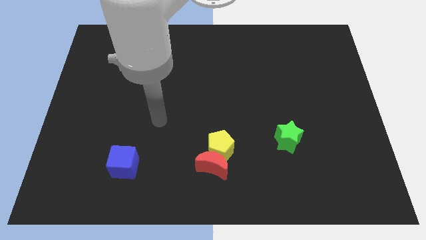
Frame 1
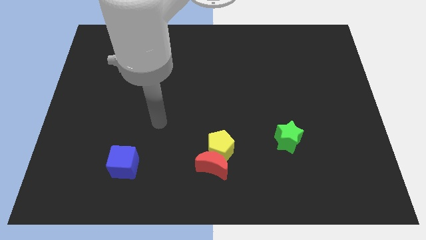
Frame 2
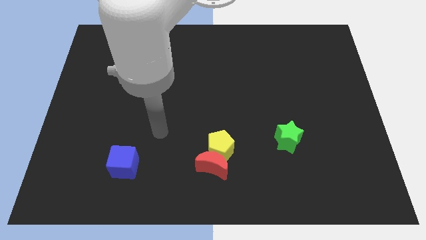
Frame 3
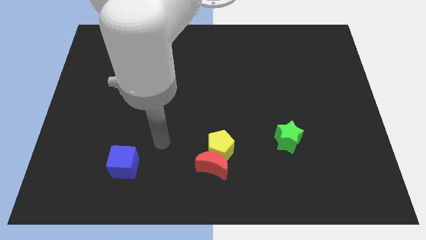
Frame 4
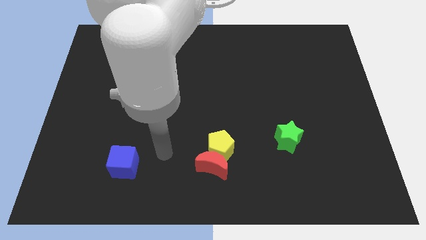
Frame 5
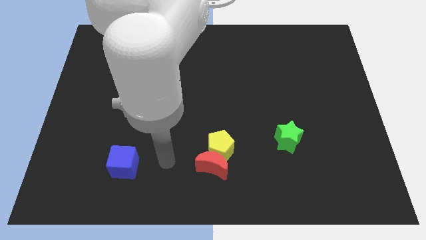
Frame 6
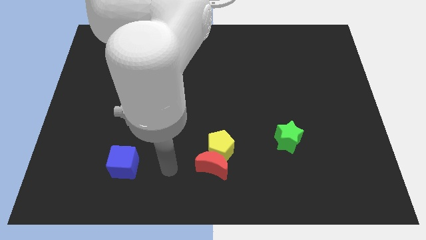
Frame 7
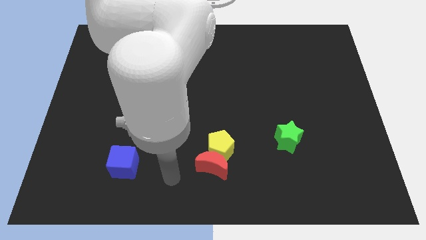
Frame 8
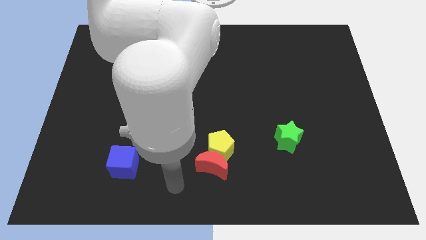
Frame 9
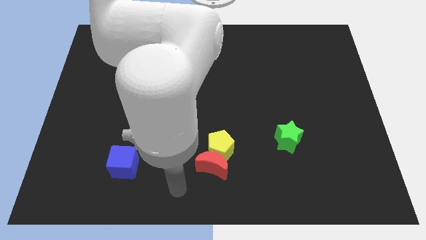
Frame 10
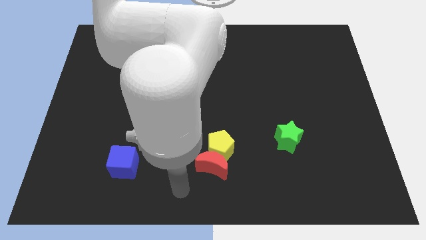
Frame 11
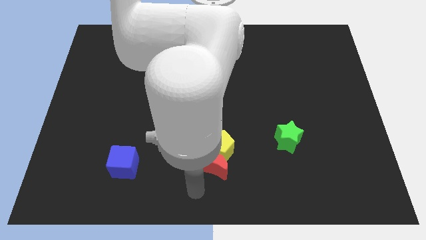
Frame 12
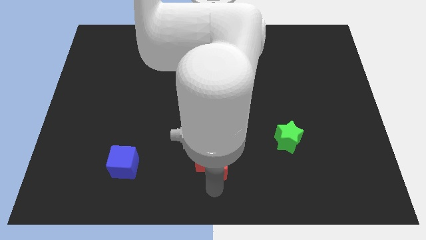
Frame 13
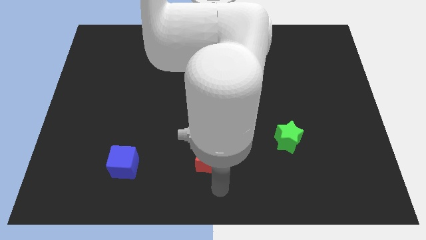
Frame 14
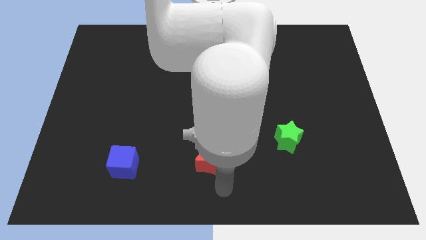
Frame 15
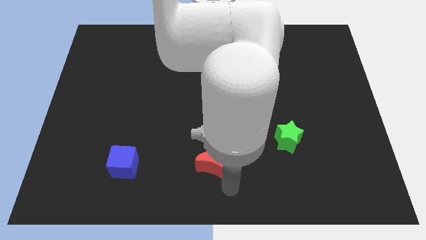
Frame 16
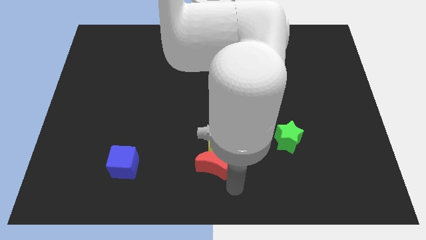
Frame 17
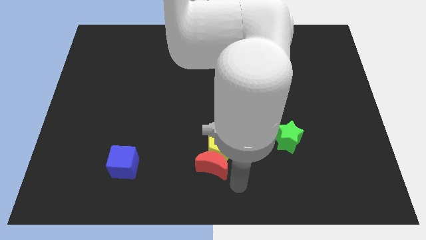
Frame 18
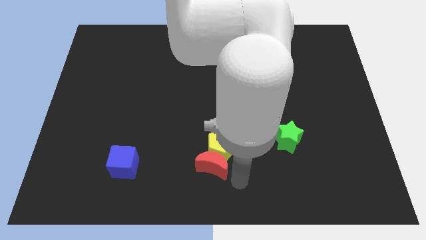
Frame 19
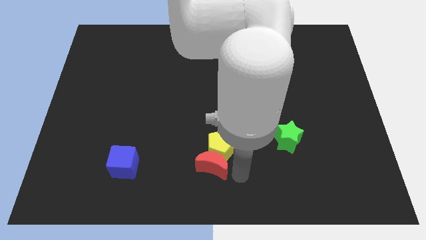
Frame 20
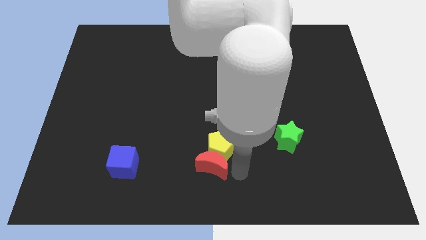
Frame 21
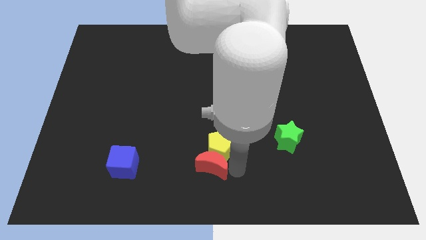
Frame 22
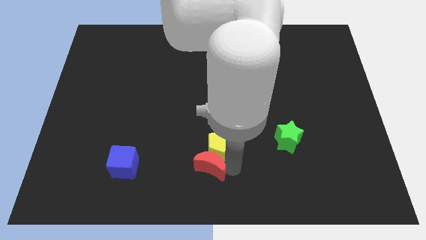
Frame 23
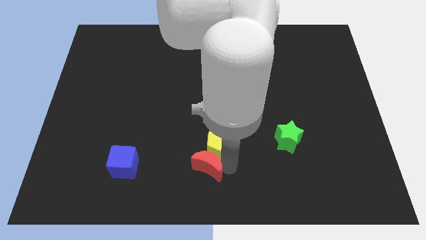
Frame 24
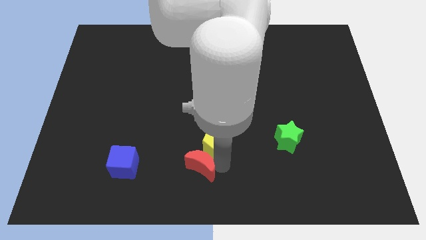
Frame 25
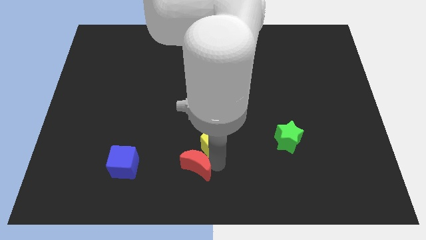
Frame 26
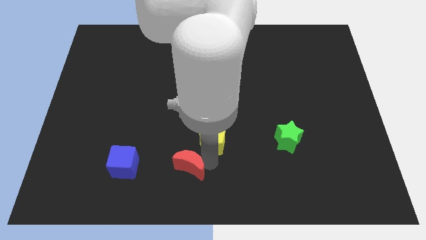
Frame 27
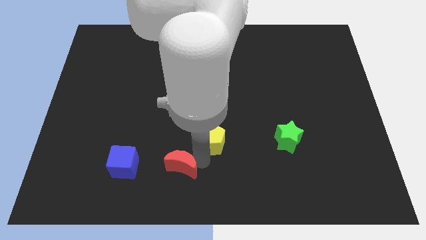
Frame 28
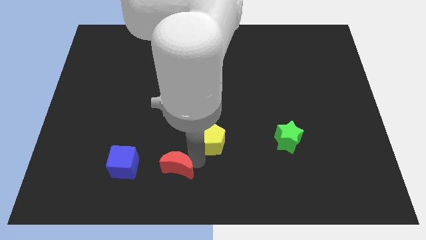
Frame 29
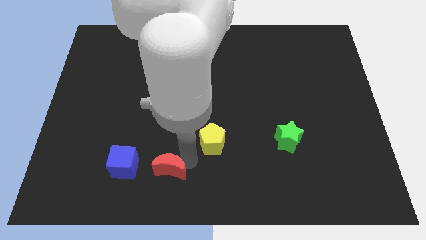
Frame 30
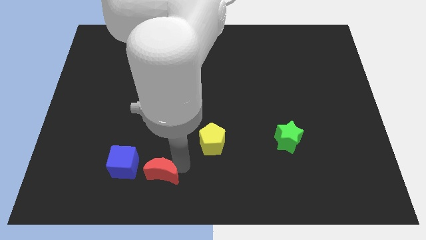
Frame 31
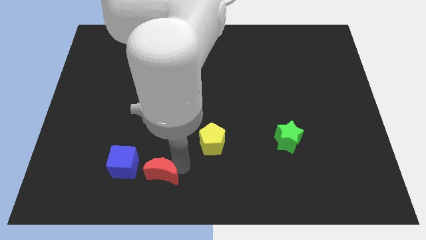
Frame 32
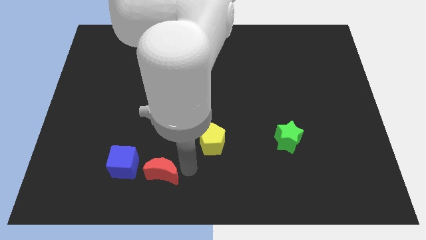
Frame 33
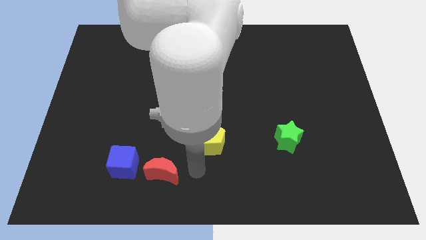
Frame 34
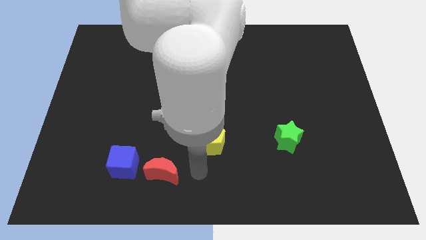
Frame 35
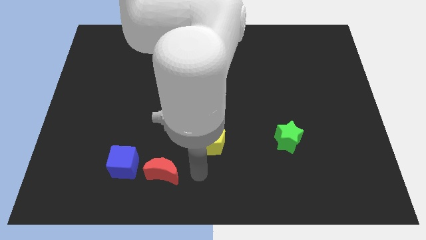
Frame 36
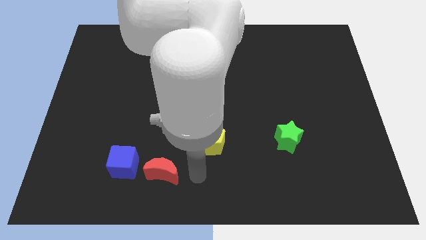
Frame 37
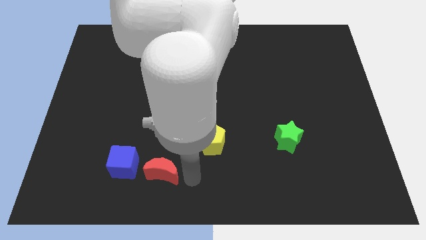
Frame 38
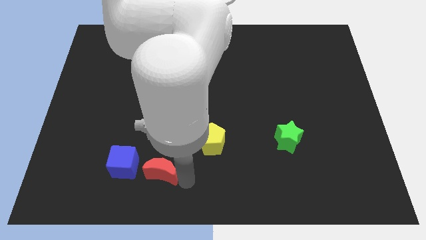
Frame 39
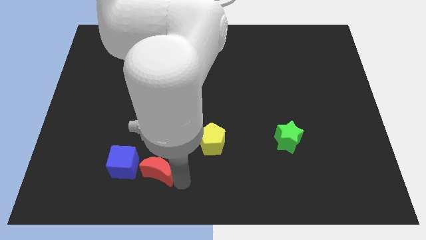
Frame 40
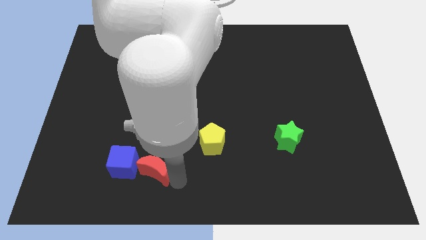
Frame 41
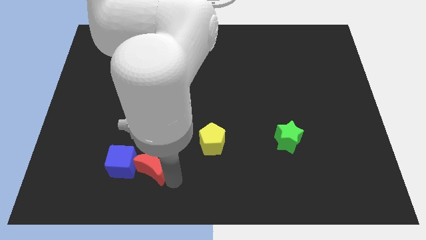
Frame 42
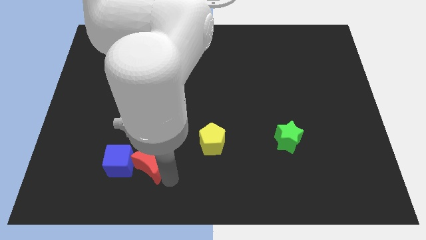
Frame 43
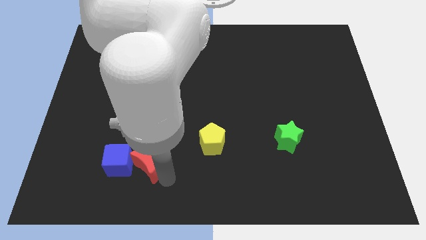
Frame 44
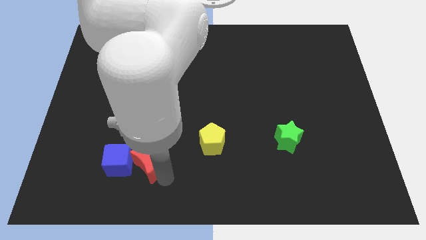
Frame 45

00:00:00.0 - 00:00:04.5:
slide the moon towards the cube

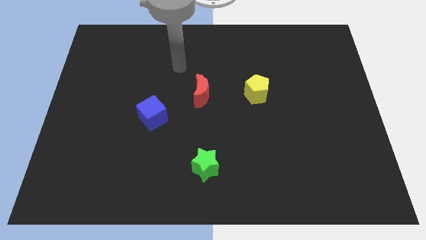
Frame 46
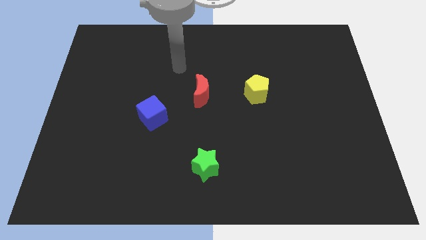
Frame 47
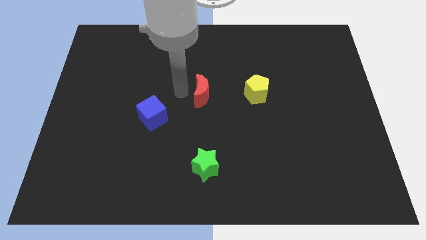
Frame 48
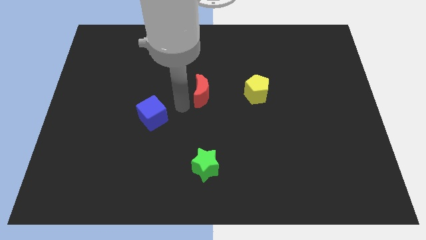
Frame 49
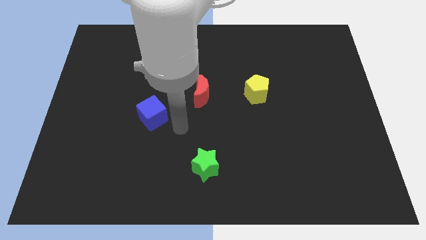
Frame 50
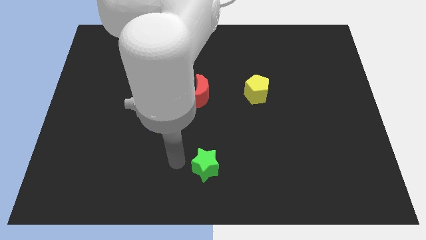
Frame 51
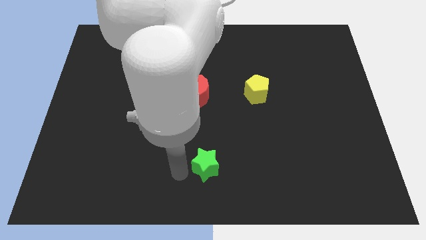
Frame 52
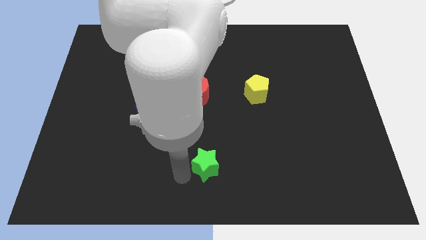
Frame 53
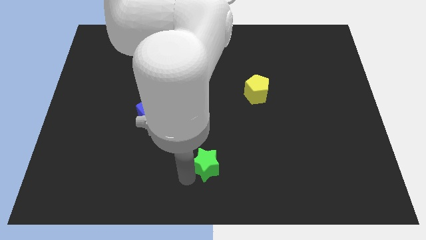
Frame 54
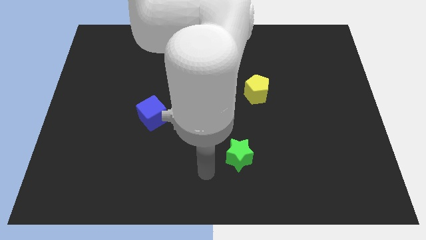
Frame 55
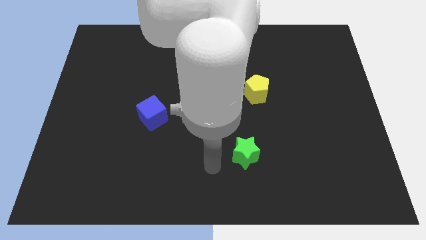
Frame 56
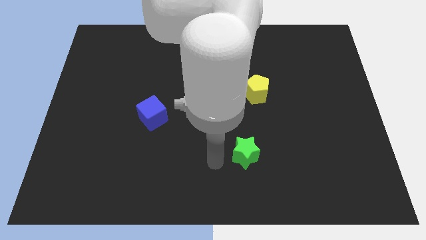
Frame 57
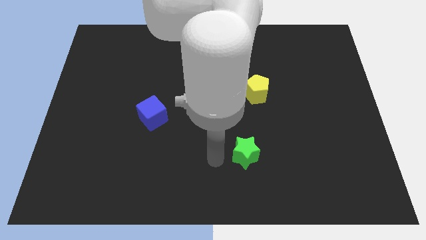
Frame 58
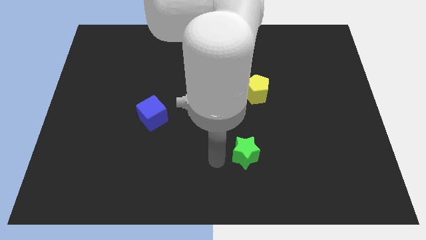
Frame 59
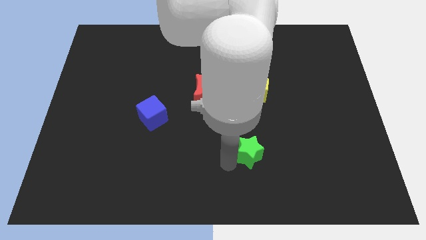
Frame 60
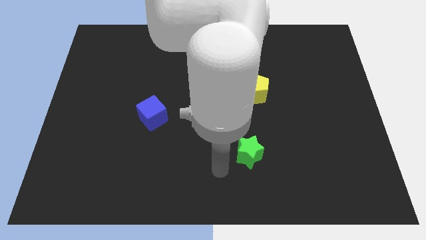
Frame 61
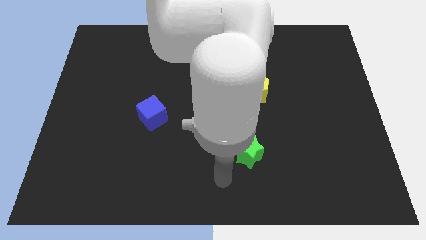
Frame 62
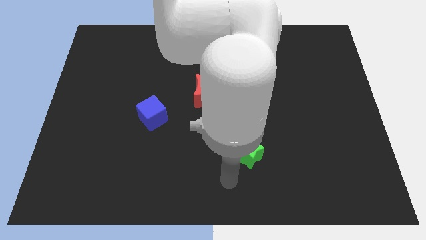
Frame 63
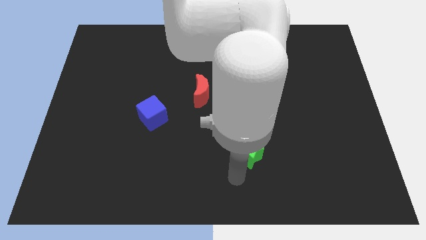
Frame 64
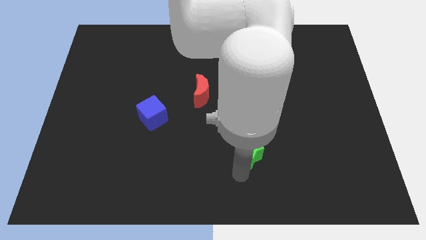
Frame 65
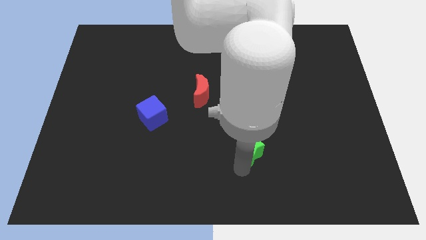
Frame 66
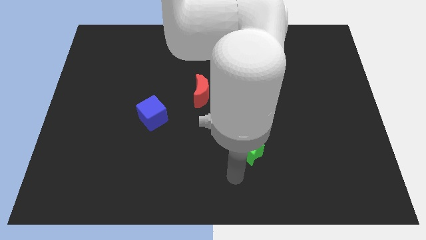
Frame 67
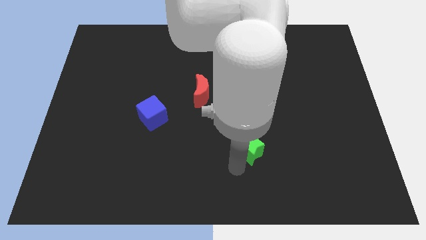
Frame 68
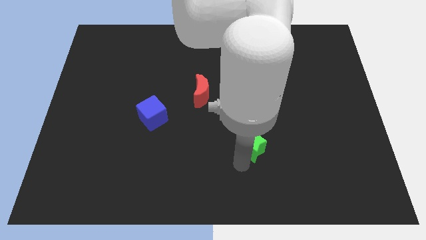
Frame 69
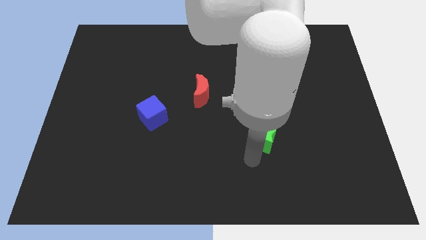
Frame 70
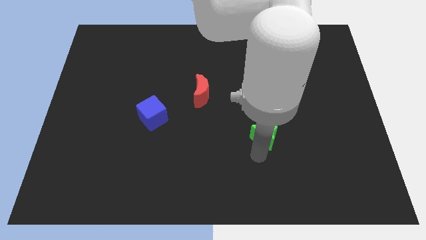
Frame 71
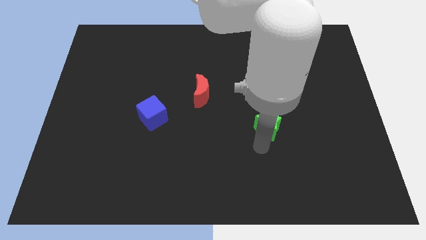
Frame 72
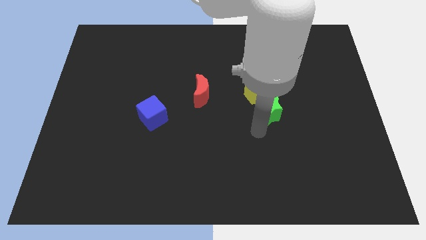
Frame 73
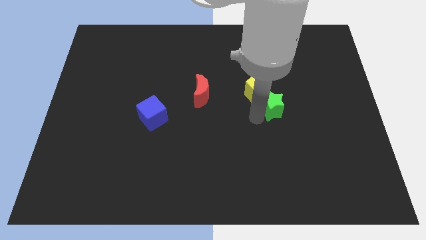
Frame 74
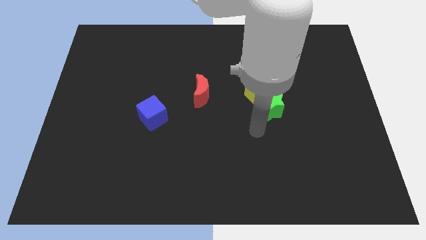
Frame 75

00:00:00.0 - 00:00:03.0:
slide the star next to the pentagon

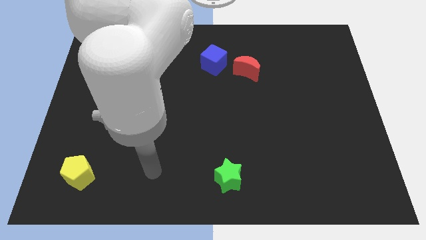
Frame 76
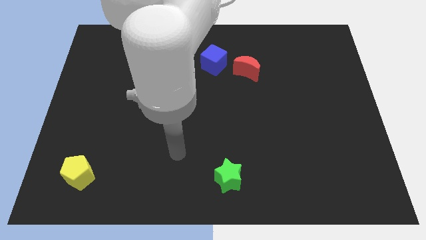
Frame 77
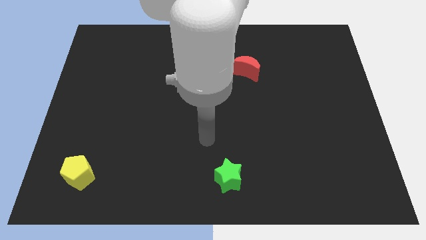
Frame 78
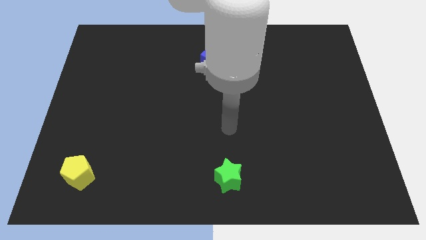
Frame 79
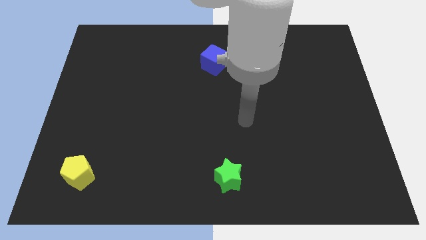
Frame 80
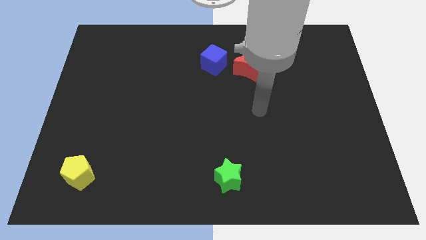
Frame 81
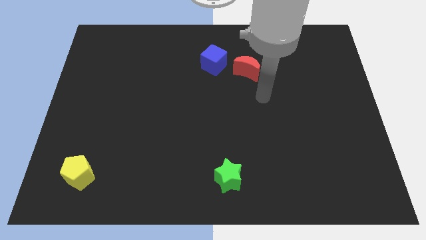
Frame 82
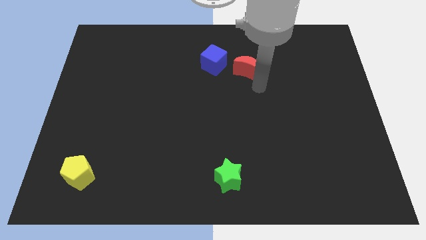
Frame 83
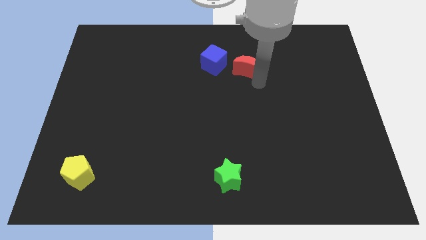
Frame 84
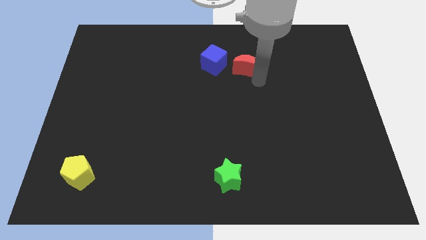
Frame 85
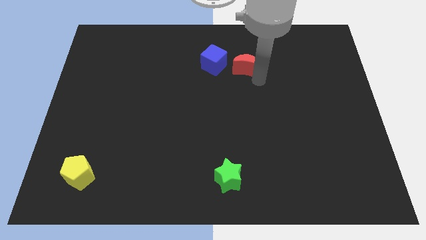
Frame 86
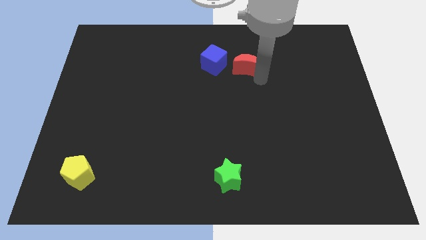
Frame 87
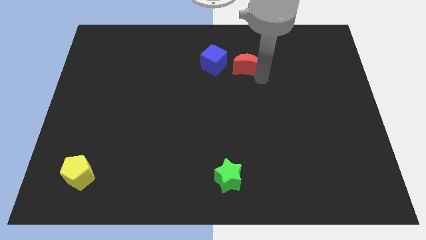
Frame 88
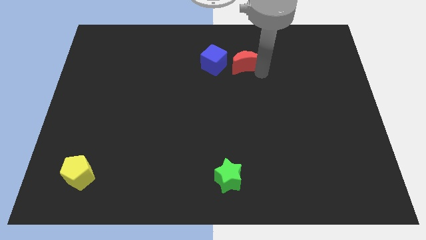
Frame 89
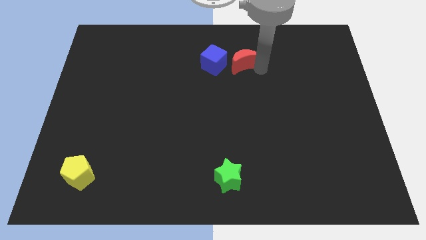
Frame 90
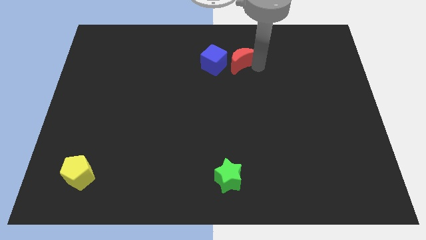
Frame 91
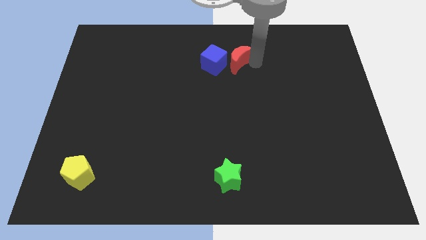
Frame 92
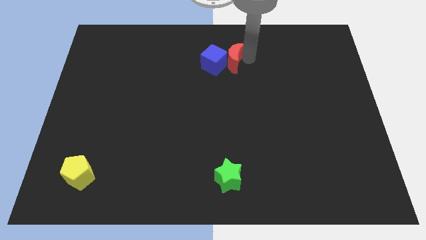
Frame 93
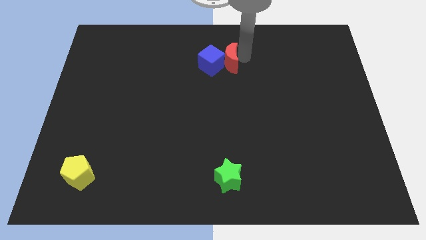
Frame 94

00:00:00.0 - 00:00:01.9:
put the red moon towards the blue block
